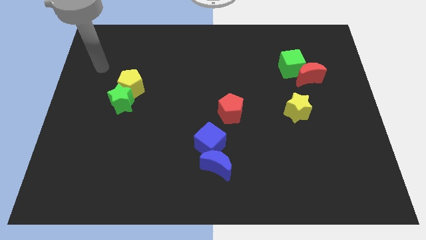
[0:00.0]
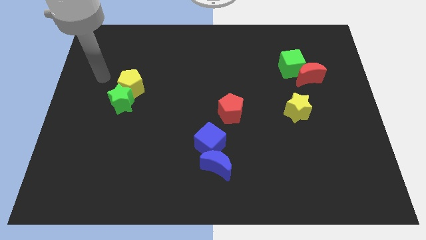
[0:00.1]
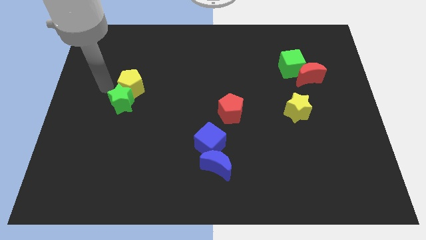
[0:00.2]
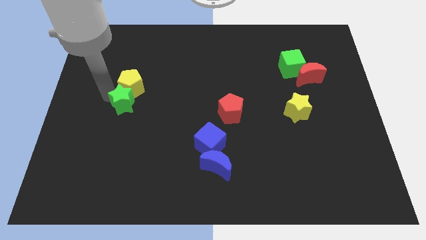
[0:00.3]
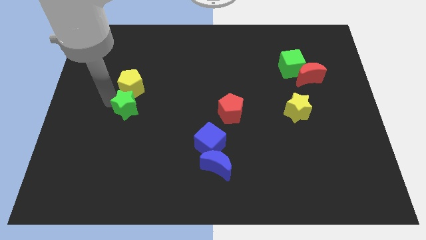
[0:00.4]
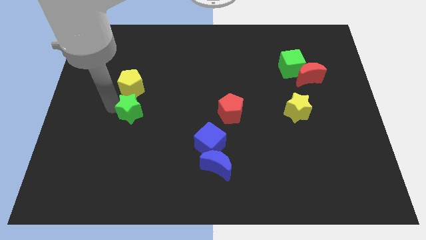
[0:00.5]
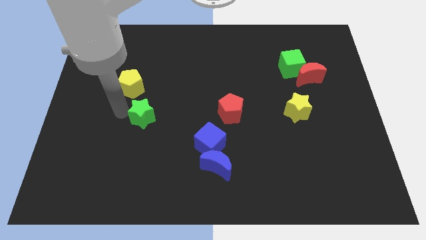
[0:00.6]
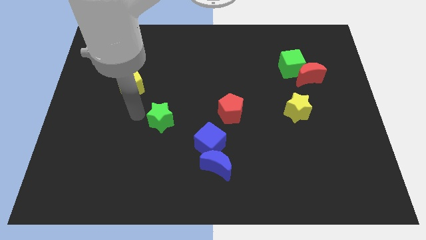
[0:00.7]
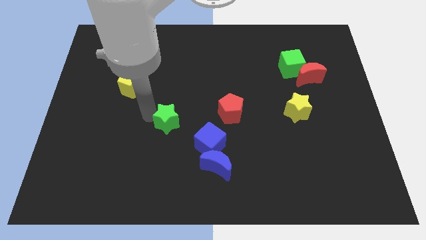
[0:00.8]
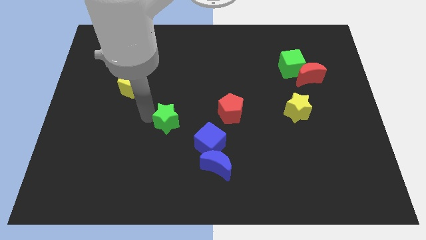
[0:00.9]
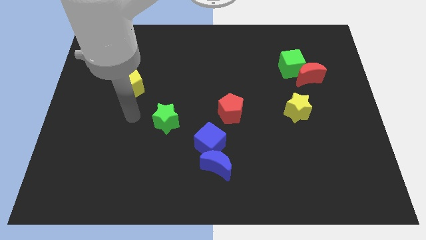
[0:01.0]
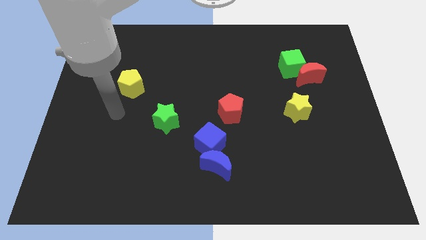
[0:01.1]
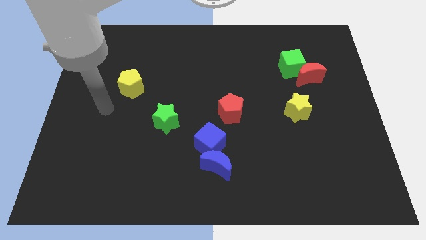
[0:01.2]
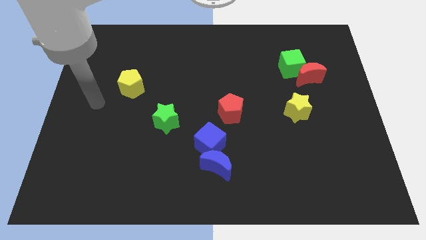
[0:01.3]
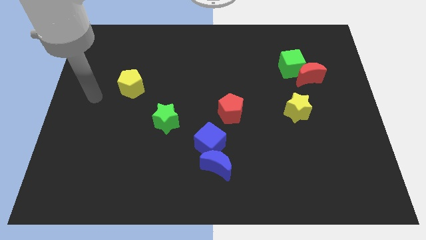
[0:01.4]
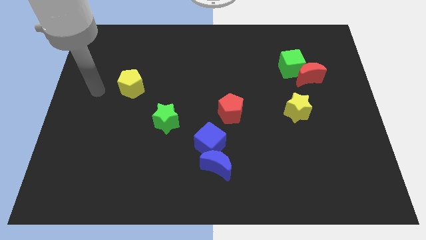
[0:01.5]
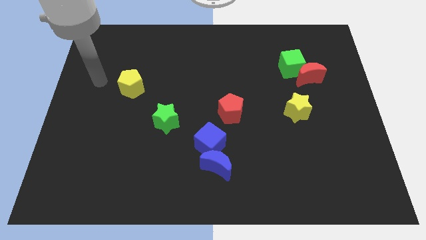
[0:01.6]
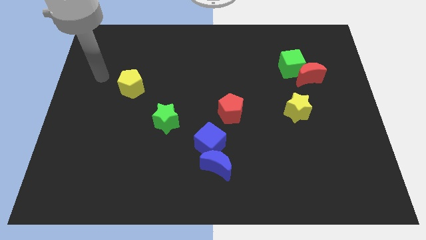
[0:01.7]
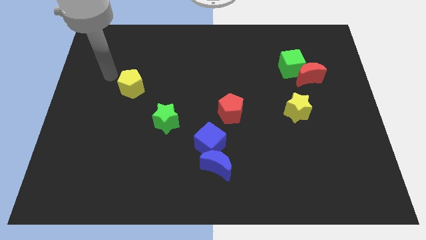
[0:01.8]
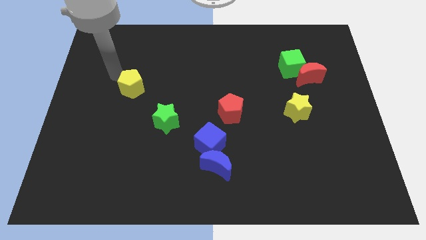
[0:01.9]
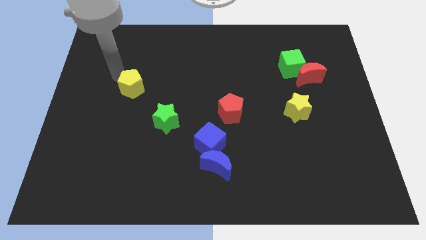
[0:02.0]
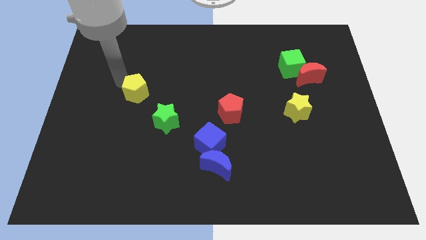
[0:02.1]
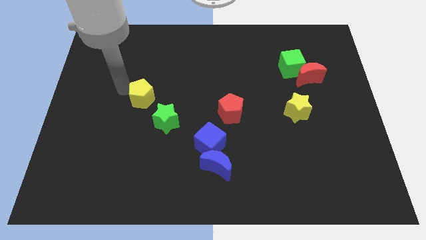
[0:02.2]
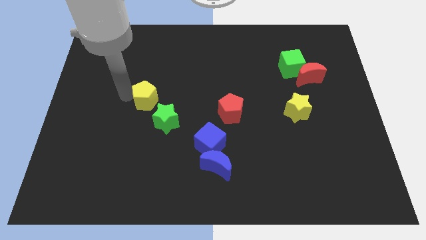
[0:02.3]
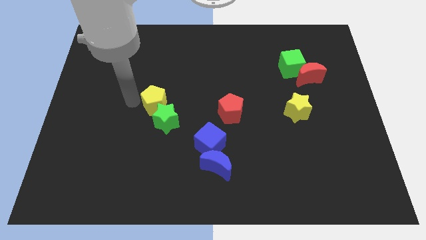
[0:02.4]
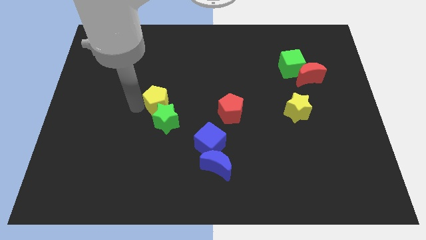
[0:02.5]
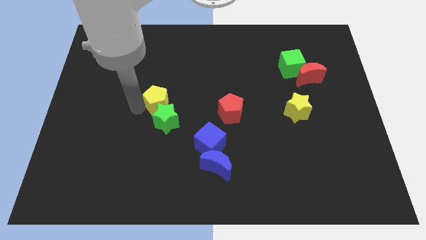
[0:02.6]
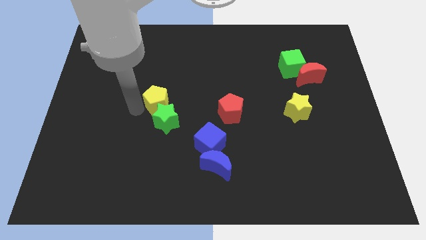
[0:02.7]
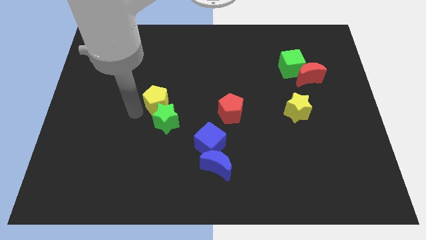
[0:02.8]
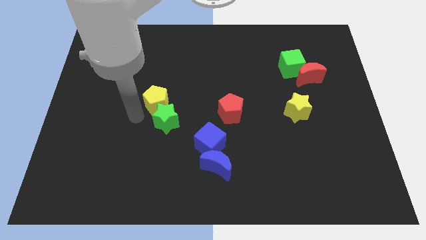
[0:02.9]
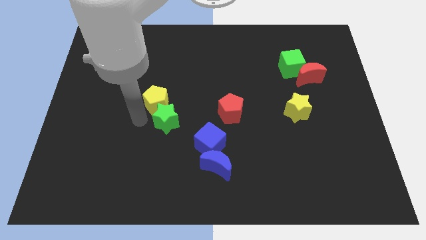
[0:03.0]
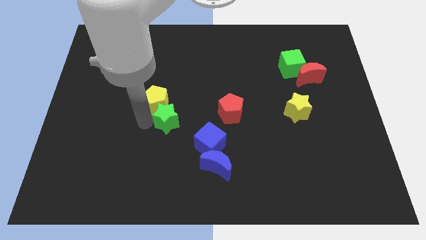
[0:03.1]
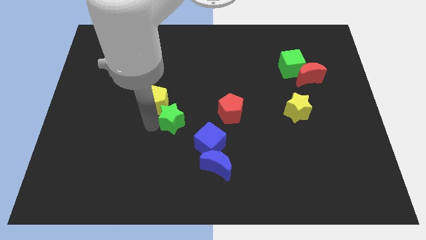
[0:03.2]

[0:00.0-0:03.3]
attach the yellow pentagon to the green star

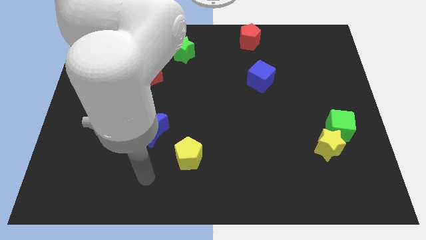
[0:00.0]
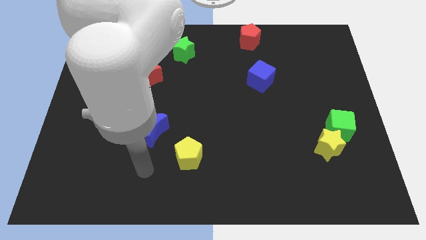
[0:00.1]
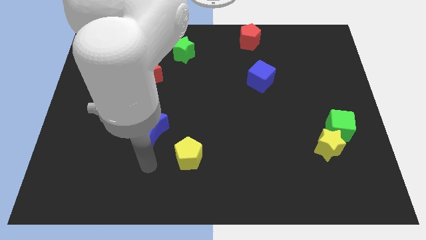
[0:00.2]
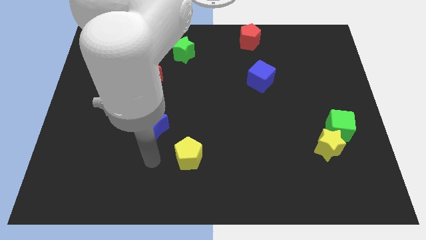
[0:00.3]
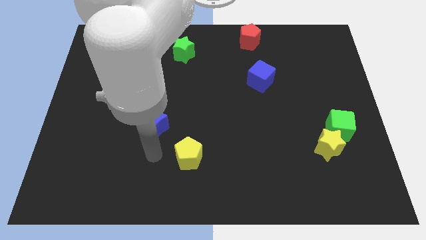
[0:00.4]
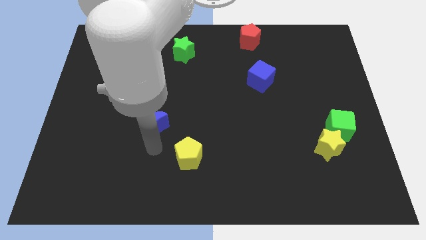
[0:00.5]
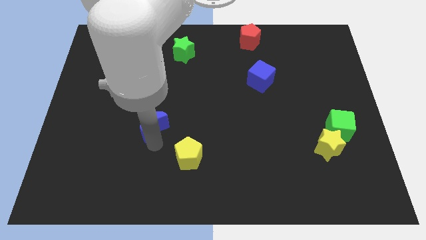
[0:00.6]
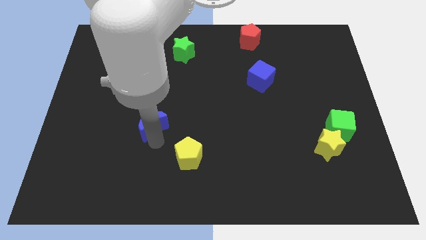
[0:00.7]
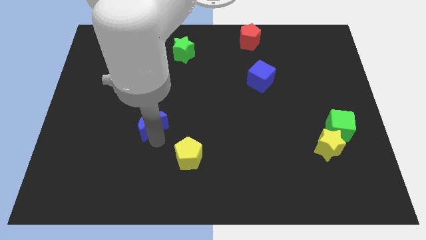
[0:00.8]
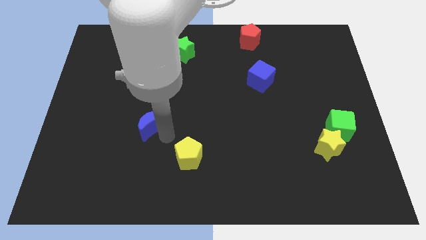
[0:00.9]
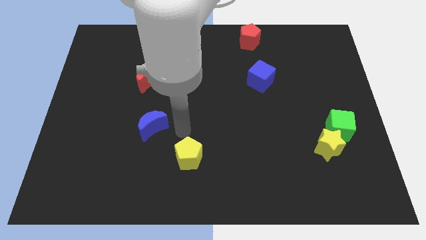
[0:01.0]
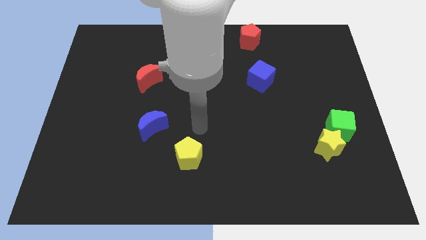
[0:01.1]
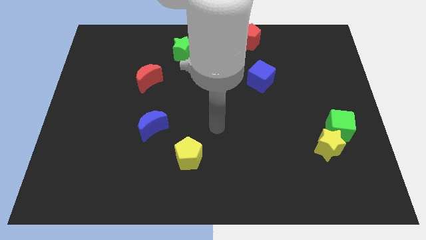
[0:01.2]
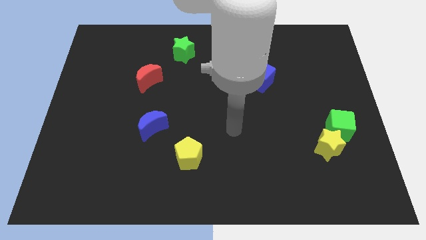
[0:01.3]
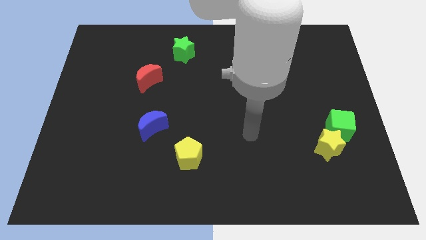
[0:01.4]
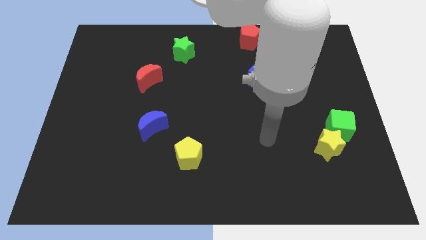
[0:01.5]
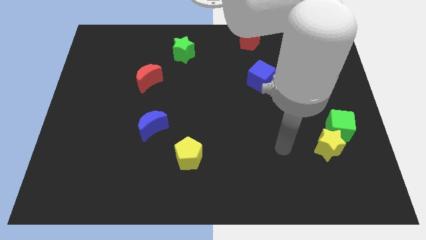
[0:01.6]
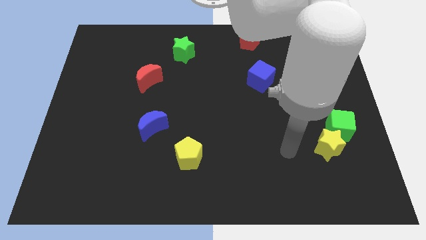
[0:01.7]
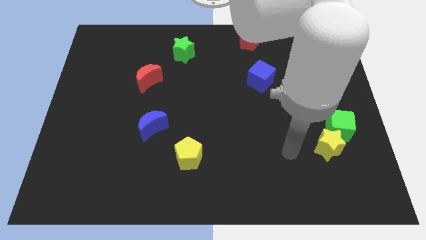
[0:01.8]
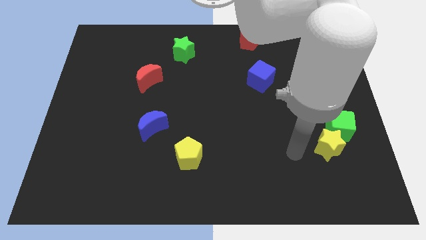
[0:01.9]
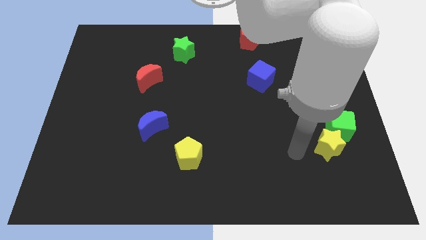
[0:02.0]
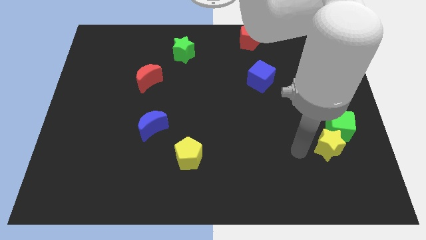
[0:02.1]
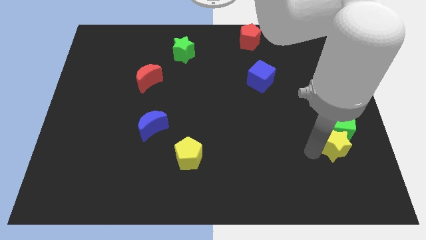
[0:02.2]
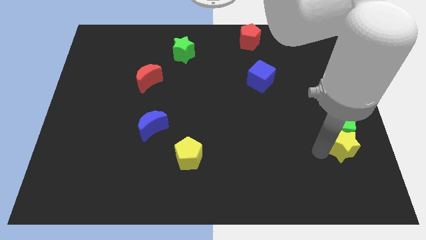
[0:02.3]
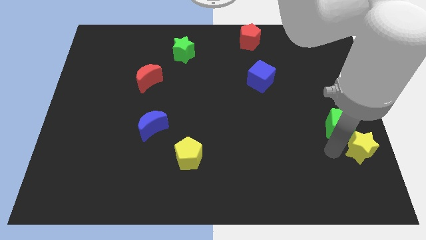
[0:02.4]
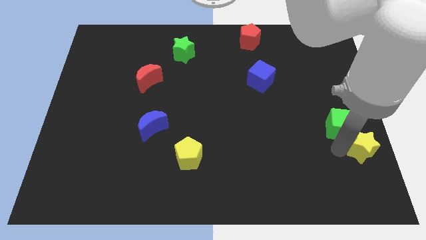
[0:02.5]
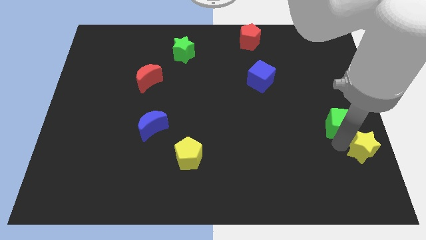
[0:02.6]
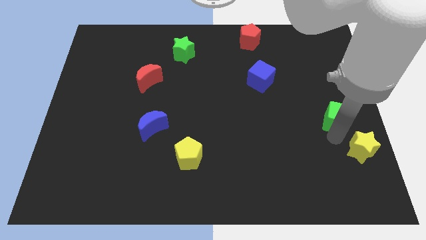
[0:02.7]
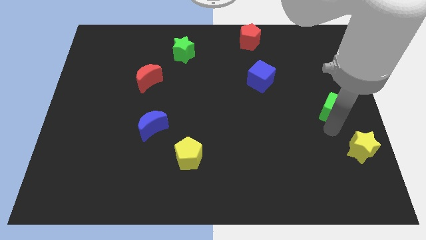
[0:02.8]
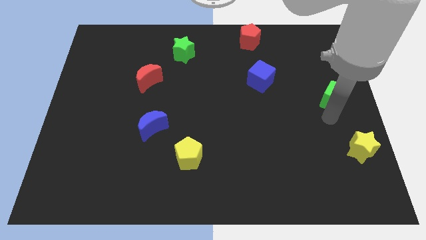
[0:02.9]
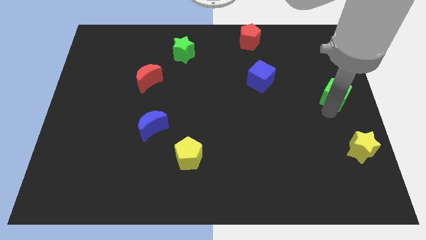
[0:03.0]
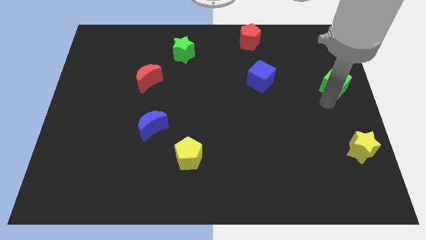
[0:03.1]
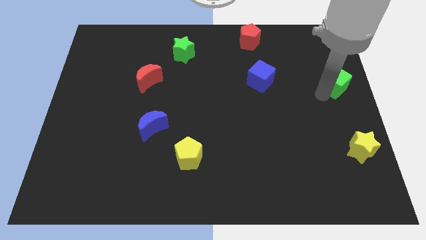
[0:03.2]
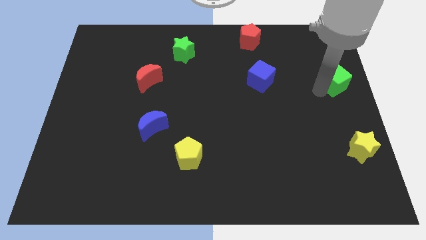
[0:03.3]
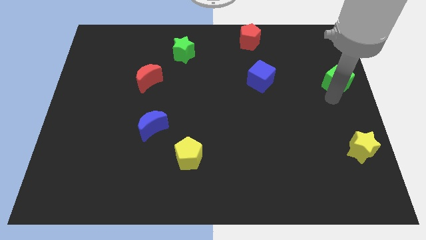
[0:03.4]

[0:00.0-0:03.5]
separate the green cube and yellow star

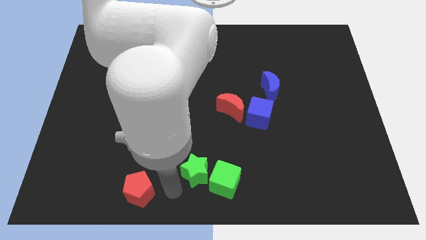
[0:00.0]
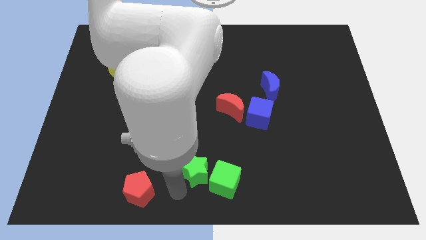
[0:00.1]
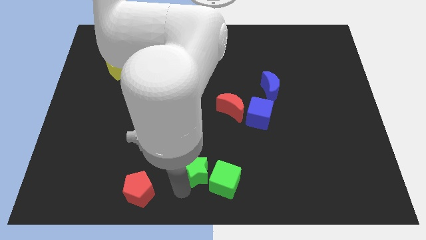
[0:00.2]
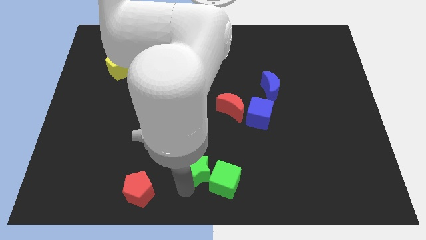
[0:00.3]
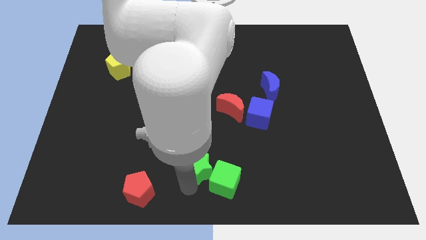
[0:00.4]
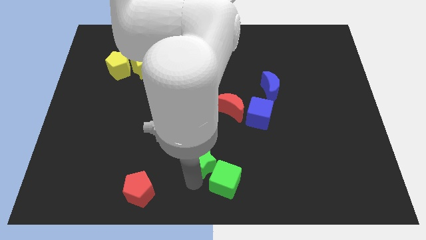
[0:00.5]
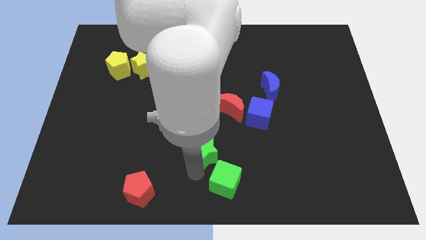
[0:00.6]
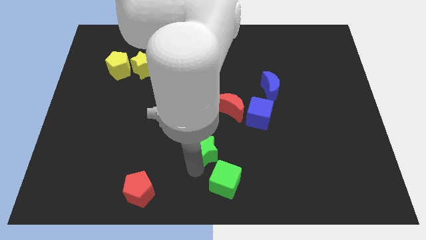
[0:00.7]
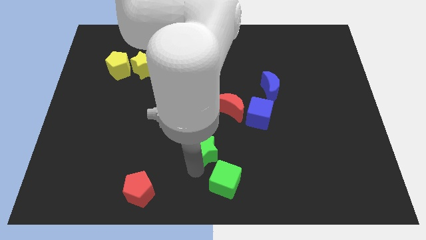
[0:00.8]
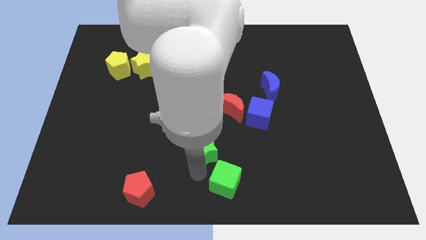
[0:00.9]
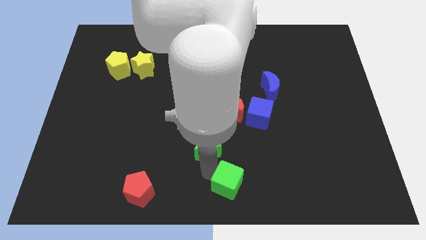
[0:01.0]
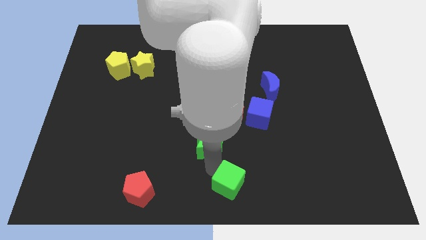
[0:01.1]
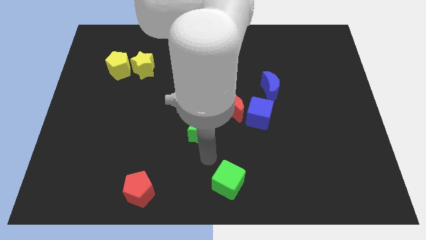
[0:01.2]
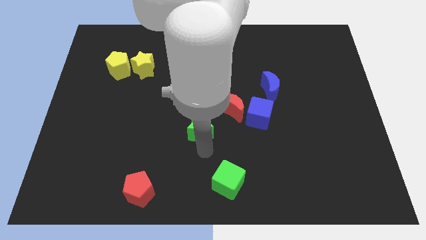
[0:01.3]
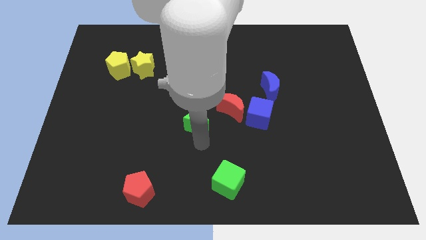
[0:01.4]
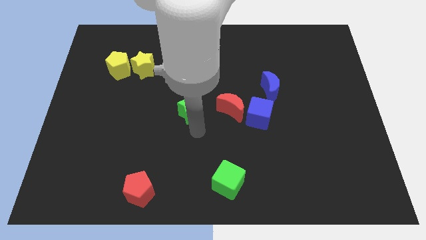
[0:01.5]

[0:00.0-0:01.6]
move the green star to the center of the board

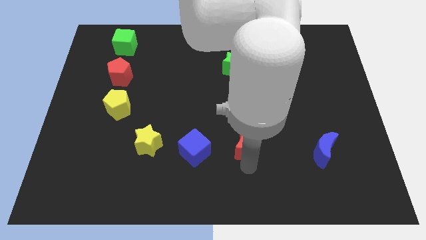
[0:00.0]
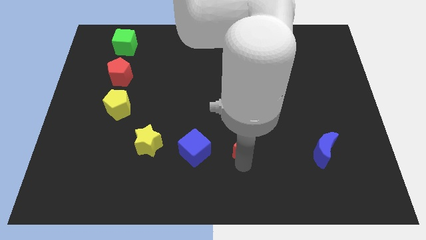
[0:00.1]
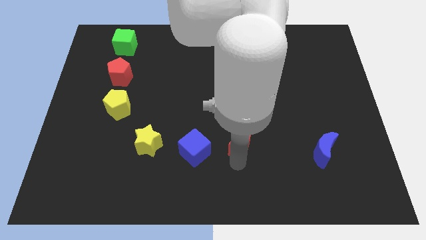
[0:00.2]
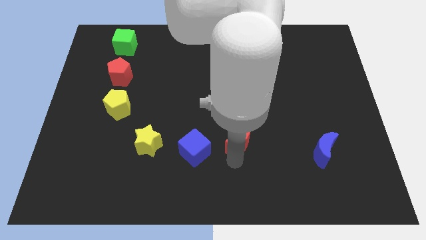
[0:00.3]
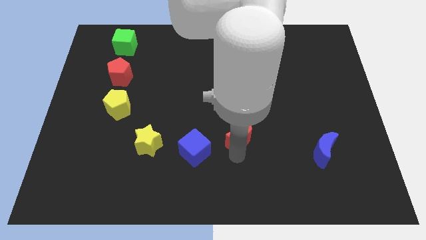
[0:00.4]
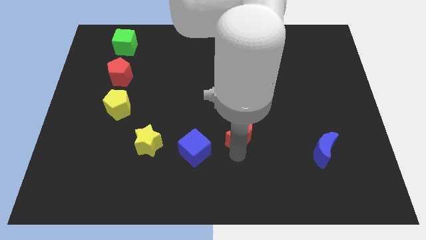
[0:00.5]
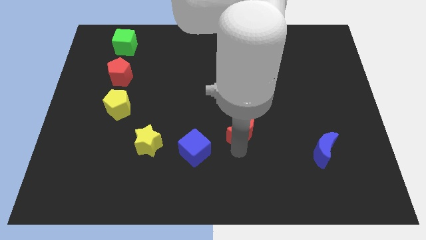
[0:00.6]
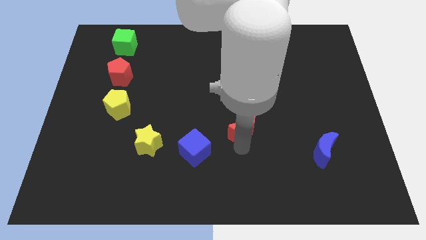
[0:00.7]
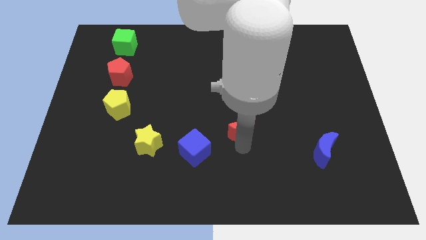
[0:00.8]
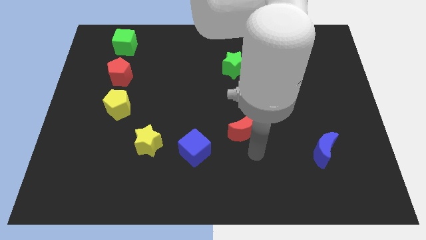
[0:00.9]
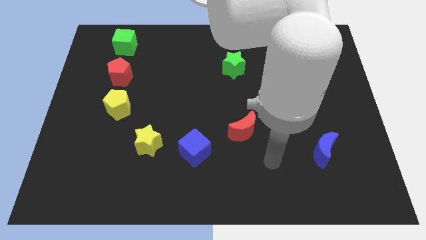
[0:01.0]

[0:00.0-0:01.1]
put the red crescent at the bottom side of the green star
